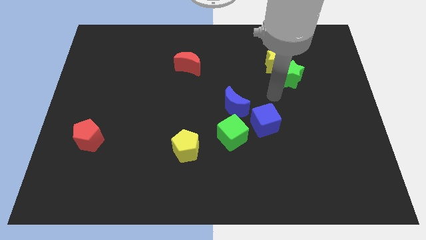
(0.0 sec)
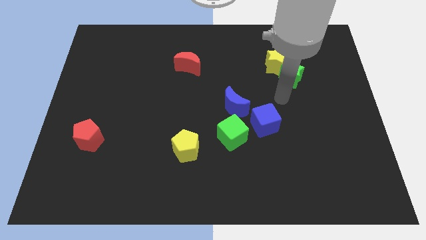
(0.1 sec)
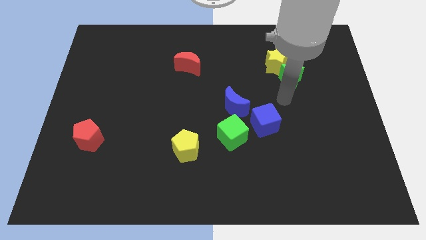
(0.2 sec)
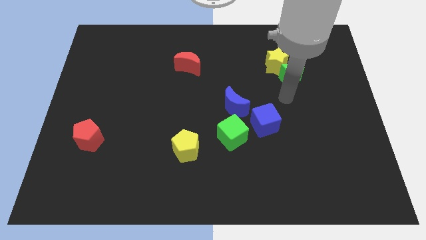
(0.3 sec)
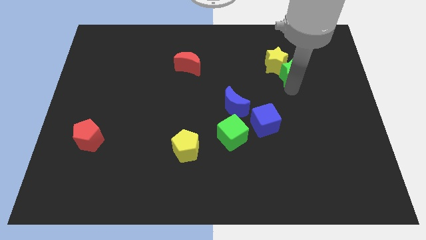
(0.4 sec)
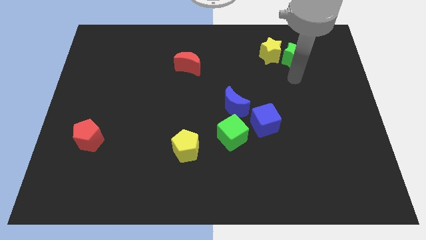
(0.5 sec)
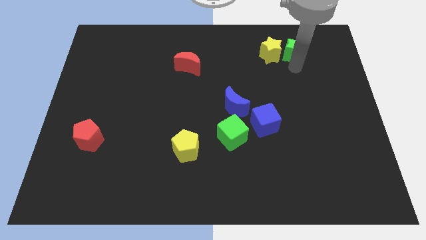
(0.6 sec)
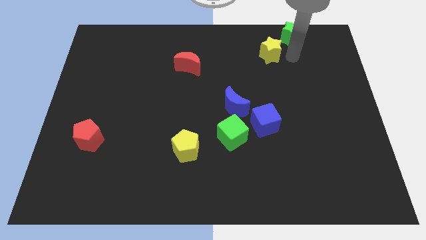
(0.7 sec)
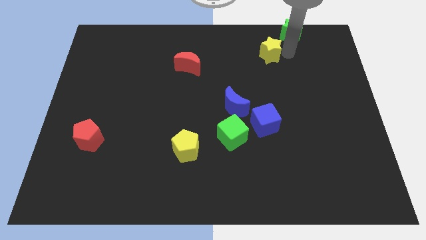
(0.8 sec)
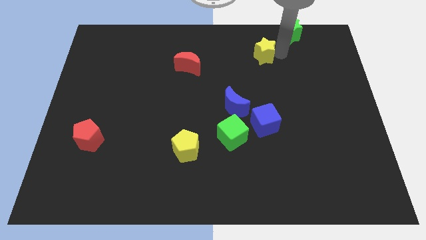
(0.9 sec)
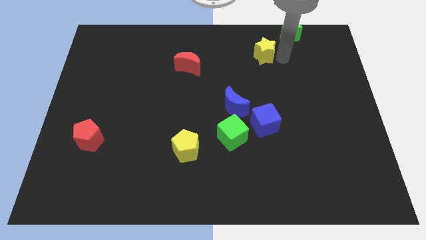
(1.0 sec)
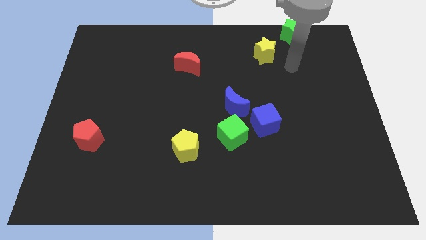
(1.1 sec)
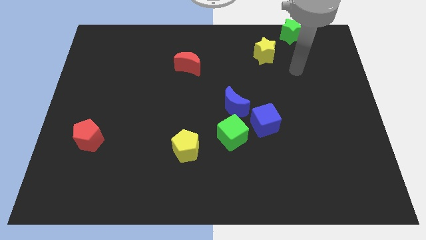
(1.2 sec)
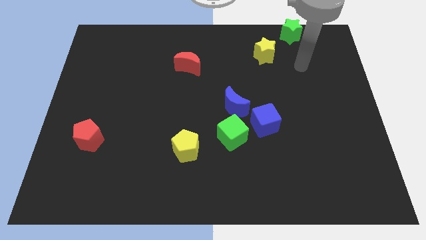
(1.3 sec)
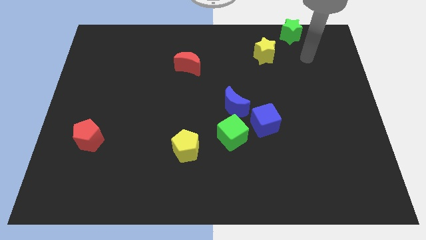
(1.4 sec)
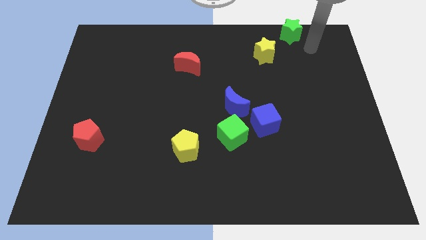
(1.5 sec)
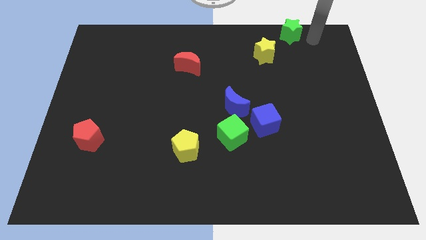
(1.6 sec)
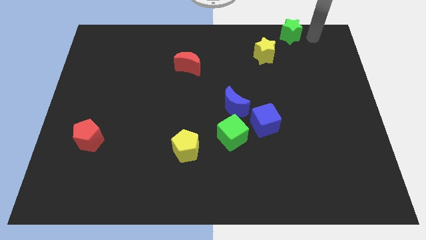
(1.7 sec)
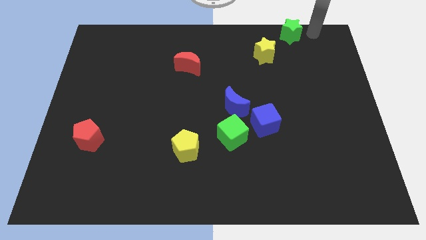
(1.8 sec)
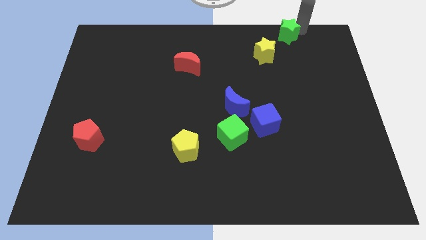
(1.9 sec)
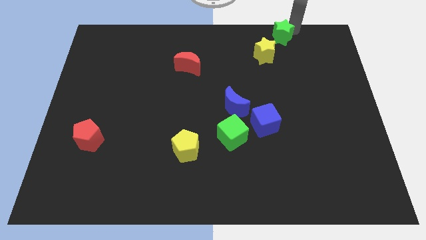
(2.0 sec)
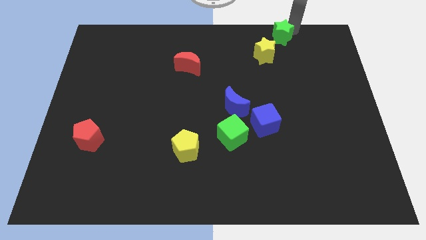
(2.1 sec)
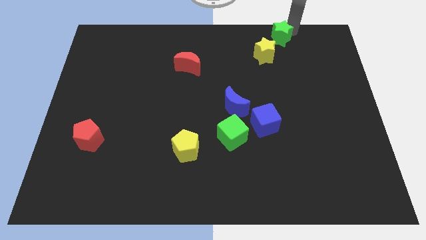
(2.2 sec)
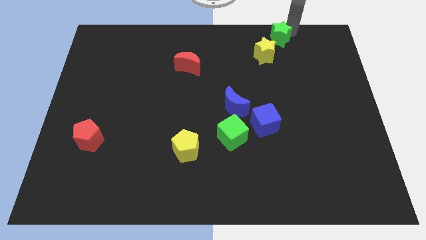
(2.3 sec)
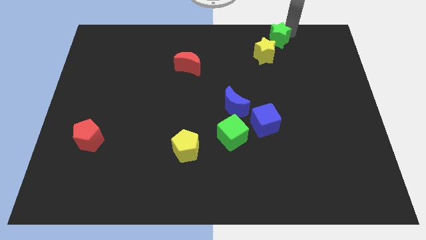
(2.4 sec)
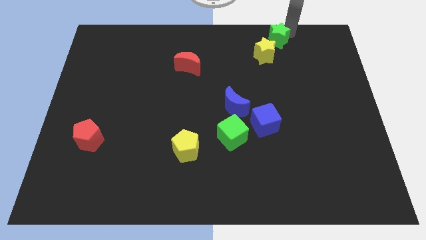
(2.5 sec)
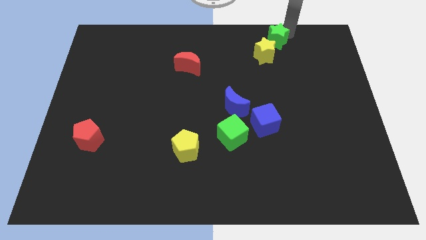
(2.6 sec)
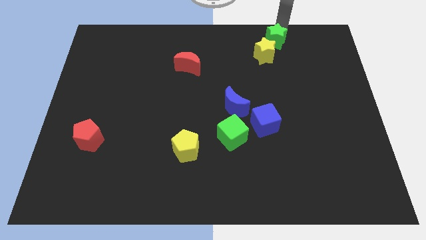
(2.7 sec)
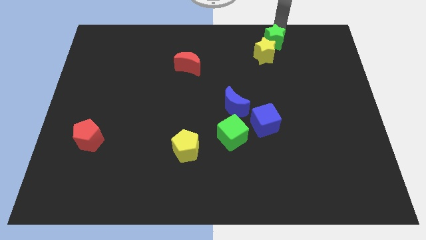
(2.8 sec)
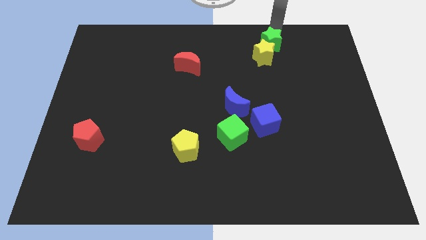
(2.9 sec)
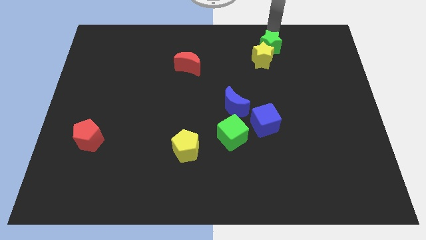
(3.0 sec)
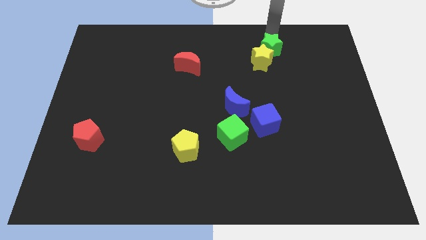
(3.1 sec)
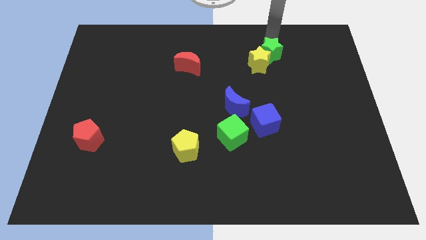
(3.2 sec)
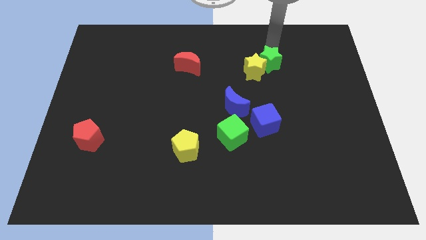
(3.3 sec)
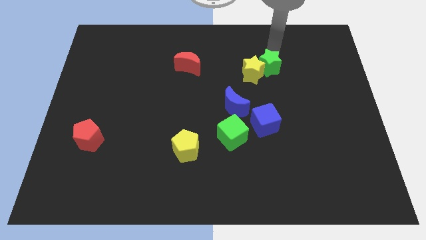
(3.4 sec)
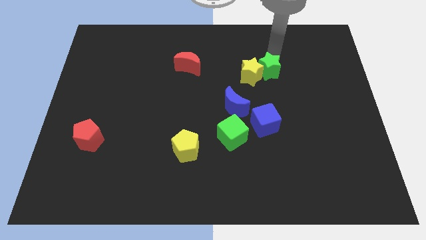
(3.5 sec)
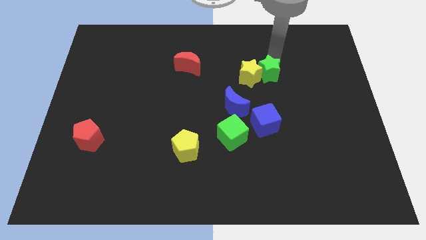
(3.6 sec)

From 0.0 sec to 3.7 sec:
move green star into yellow star

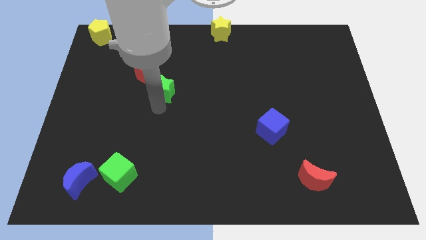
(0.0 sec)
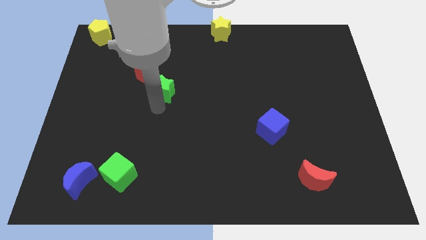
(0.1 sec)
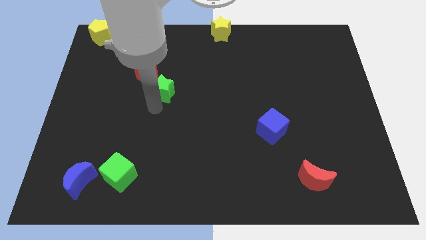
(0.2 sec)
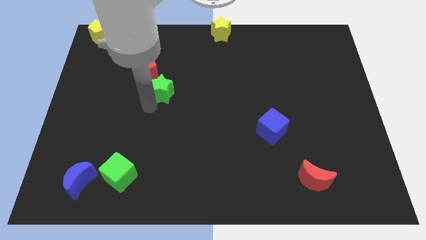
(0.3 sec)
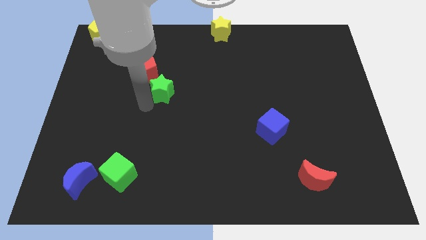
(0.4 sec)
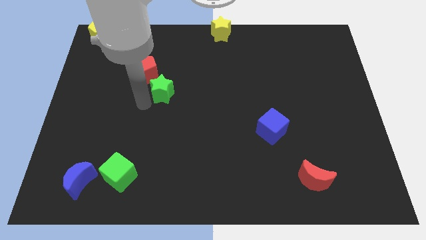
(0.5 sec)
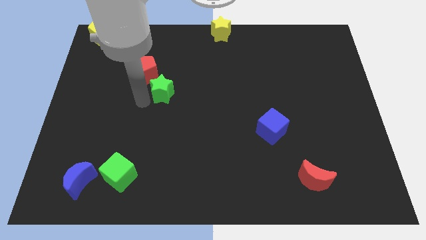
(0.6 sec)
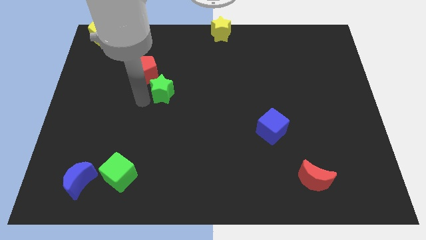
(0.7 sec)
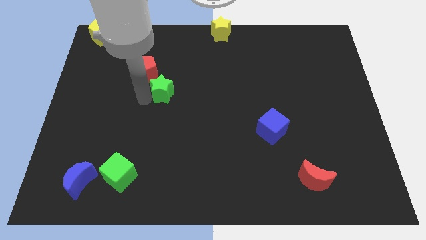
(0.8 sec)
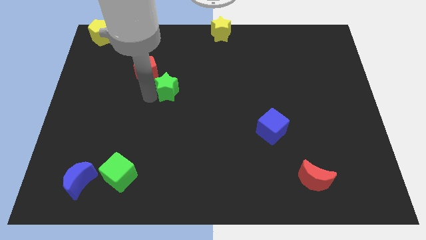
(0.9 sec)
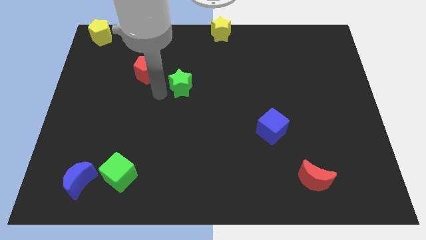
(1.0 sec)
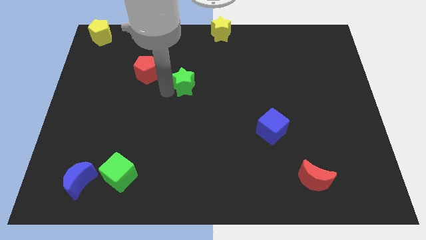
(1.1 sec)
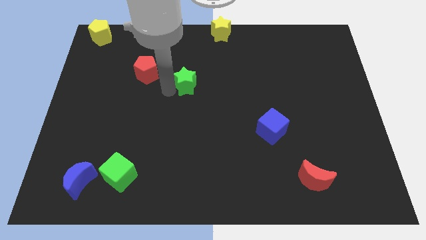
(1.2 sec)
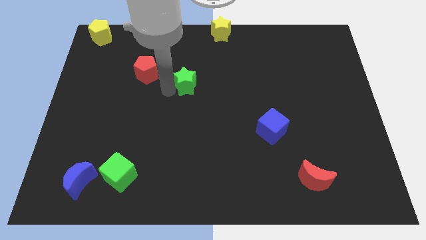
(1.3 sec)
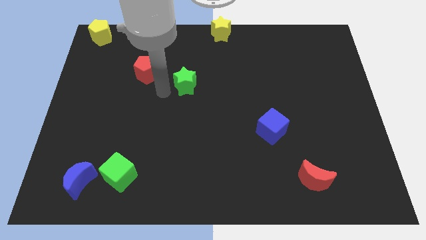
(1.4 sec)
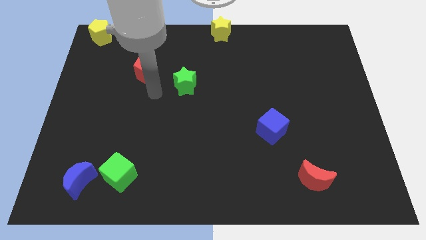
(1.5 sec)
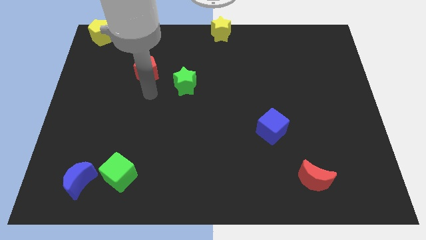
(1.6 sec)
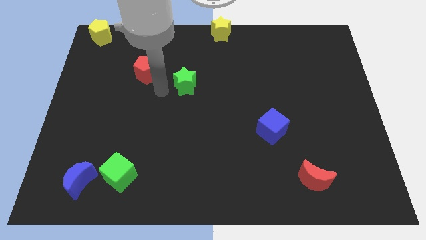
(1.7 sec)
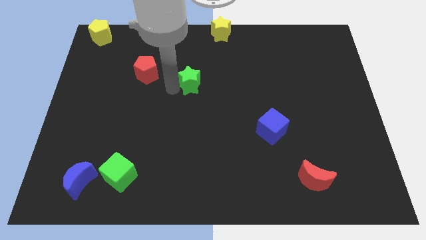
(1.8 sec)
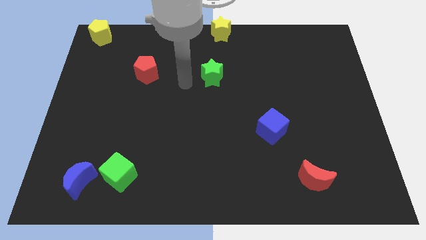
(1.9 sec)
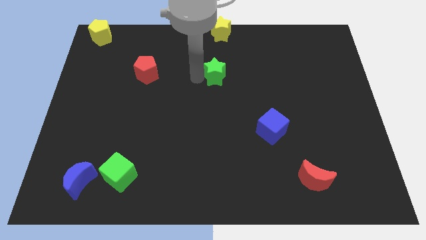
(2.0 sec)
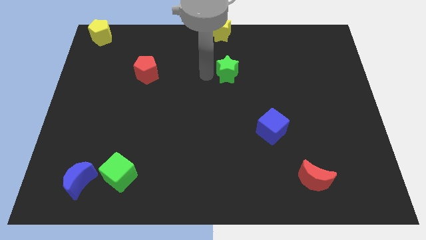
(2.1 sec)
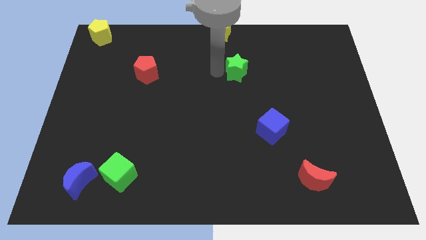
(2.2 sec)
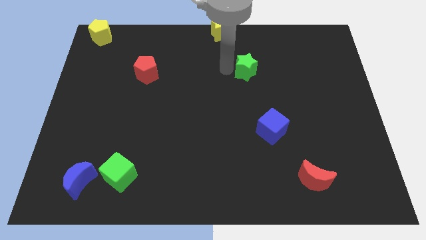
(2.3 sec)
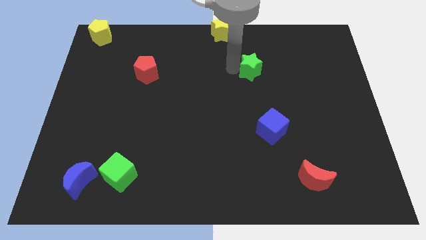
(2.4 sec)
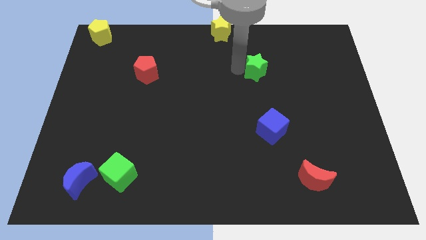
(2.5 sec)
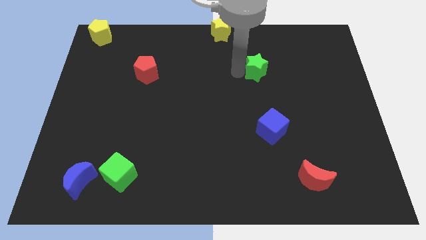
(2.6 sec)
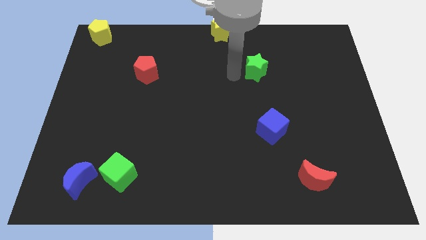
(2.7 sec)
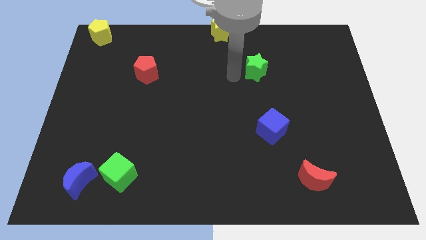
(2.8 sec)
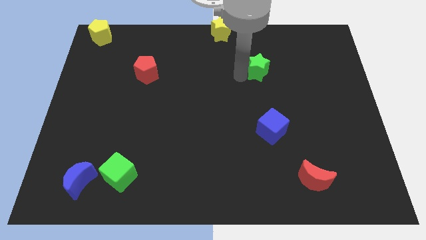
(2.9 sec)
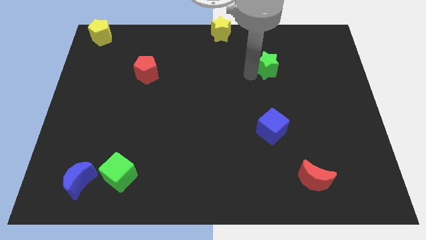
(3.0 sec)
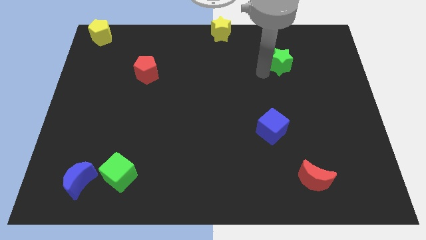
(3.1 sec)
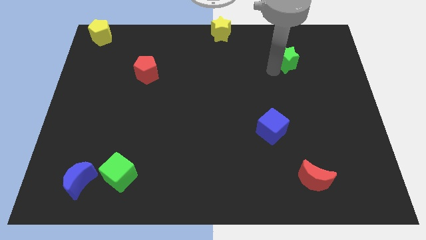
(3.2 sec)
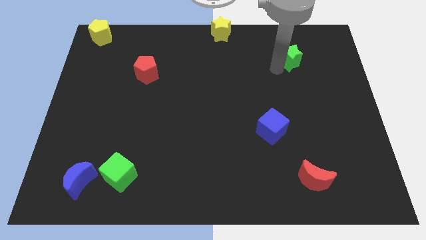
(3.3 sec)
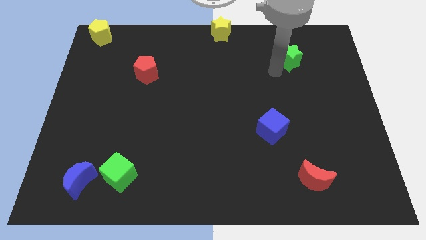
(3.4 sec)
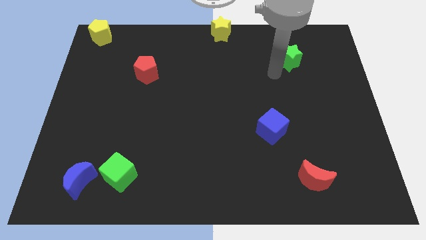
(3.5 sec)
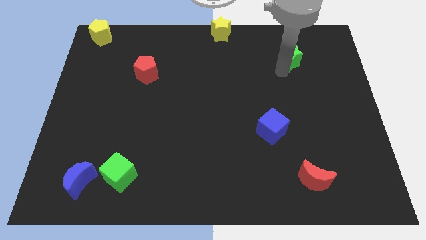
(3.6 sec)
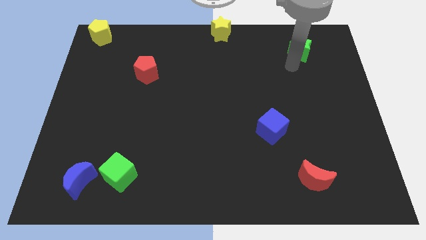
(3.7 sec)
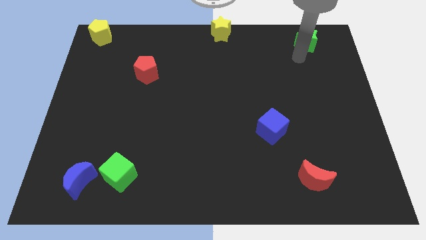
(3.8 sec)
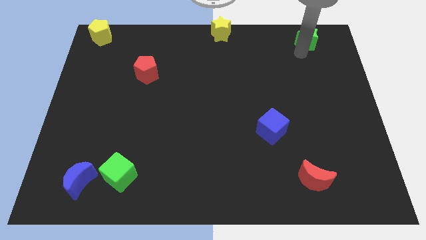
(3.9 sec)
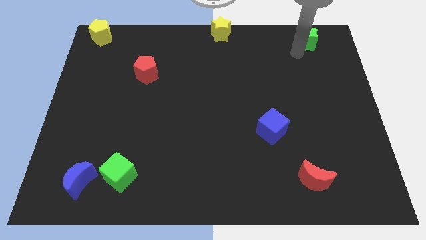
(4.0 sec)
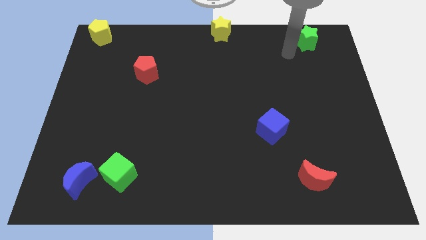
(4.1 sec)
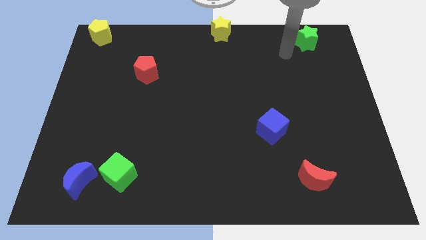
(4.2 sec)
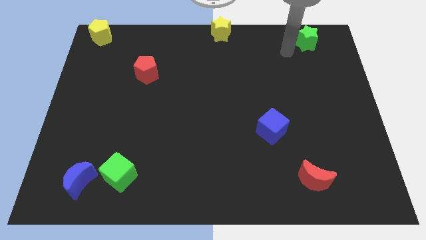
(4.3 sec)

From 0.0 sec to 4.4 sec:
push the green star towards the top right side of the board

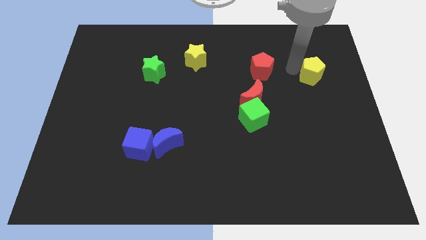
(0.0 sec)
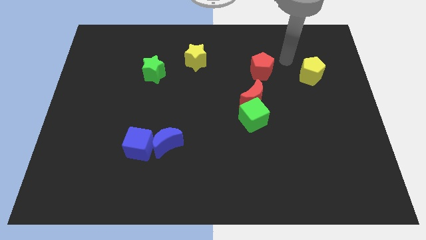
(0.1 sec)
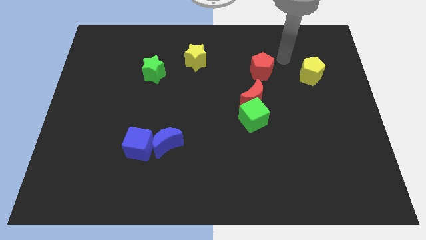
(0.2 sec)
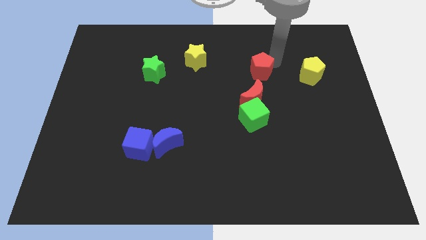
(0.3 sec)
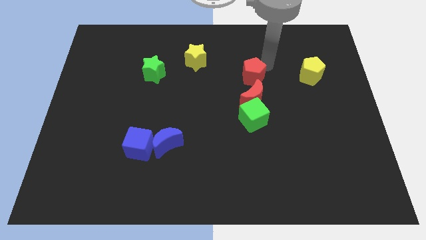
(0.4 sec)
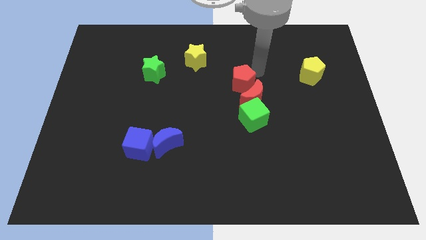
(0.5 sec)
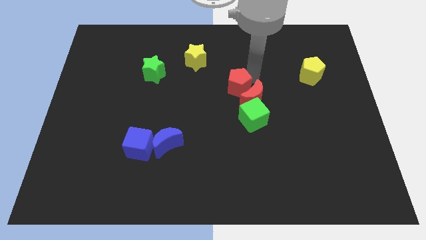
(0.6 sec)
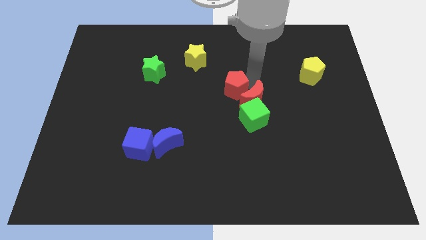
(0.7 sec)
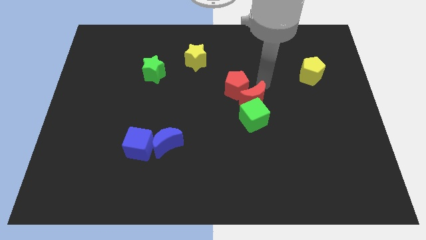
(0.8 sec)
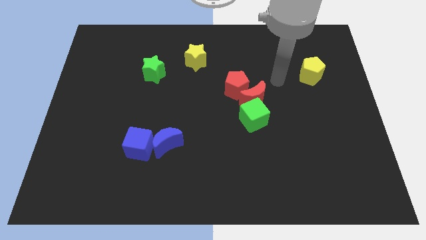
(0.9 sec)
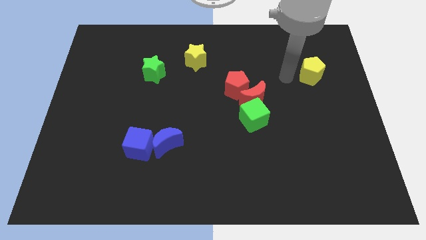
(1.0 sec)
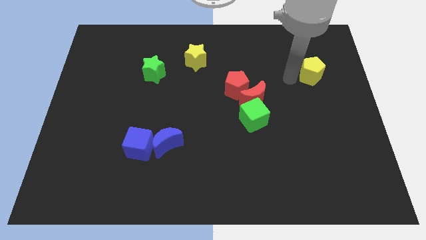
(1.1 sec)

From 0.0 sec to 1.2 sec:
place the red pentagon to the left of the red crescent
